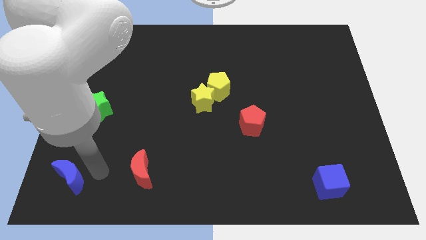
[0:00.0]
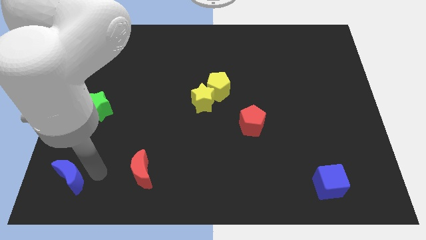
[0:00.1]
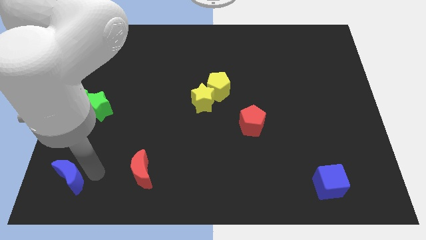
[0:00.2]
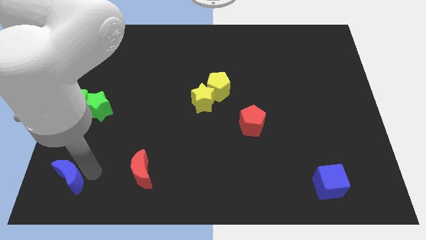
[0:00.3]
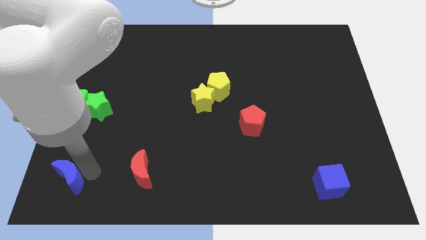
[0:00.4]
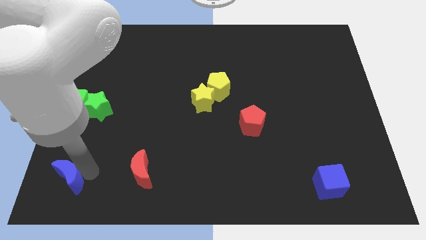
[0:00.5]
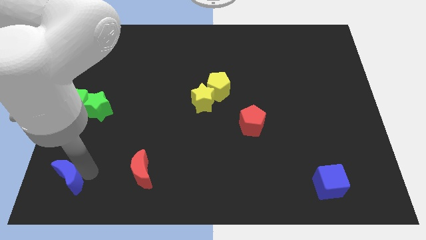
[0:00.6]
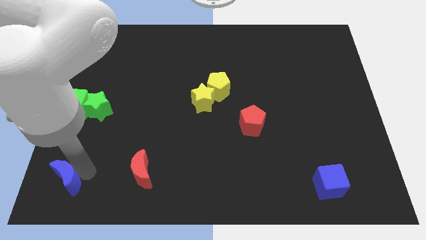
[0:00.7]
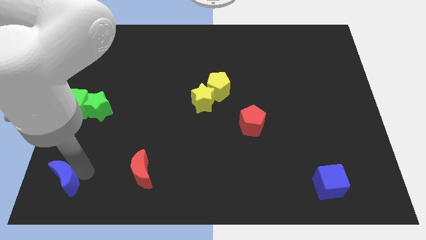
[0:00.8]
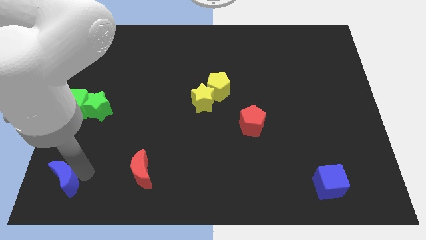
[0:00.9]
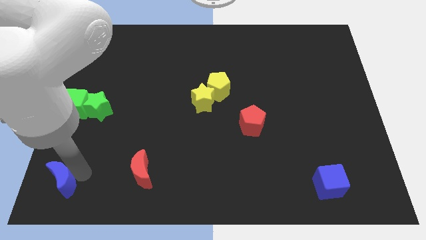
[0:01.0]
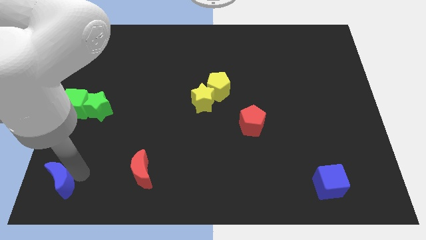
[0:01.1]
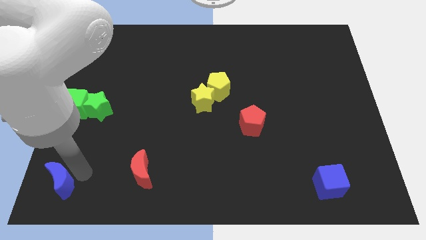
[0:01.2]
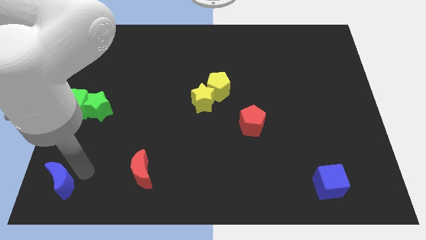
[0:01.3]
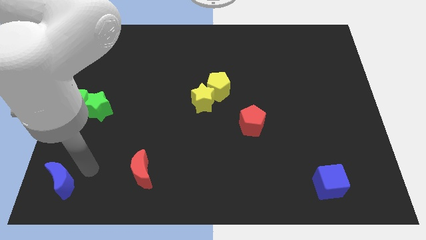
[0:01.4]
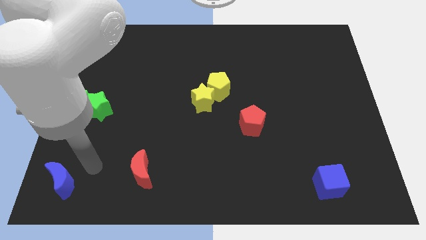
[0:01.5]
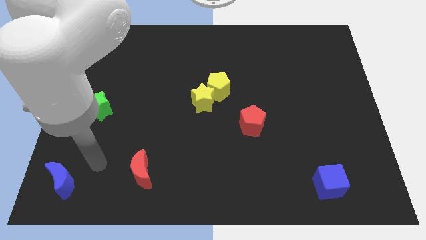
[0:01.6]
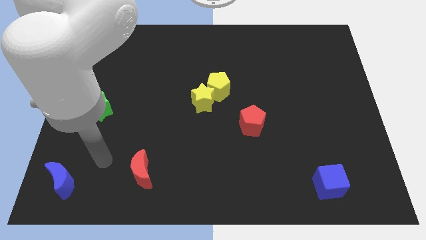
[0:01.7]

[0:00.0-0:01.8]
push the blue crescent towards the bottom left side of the board

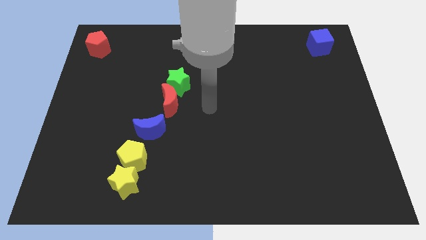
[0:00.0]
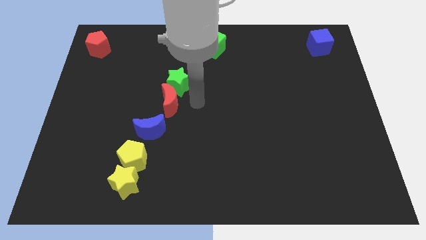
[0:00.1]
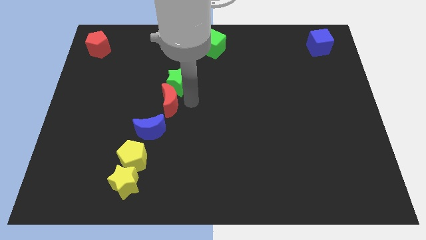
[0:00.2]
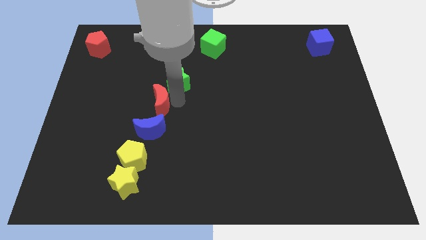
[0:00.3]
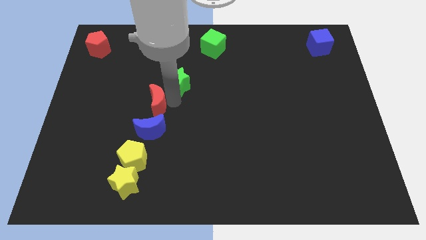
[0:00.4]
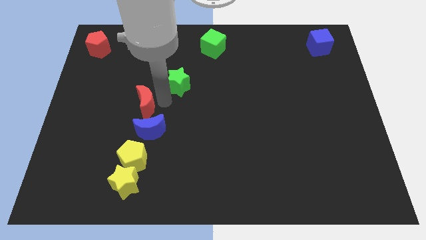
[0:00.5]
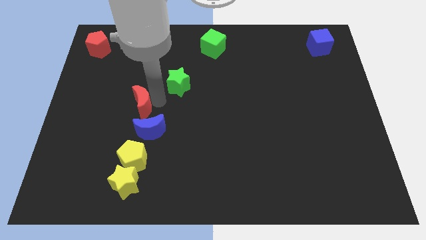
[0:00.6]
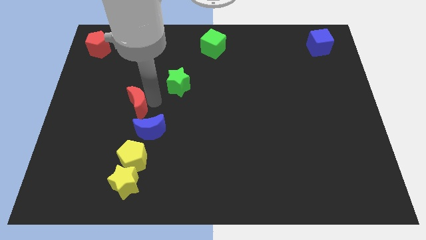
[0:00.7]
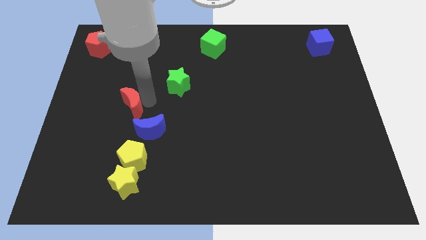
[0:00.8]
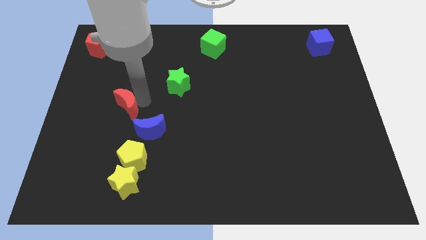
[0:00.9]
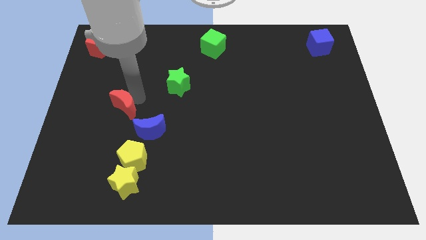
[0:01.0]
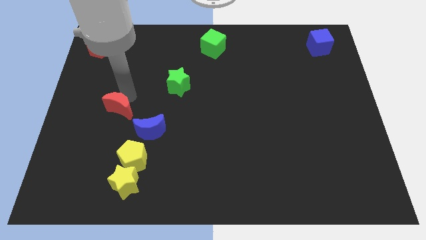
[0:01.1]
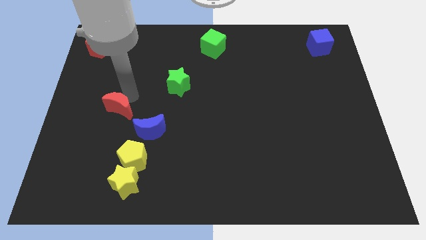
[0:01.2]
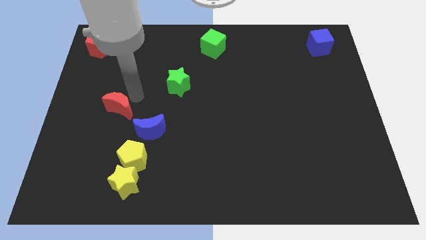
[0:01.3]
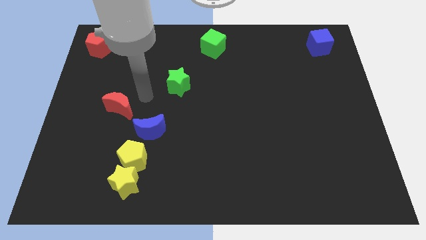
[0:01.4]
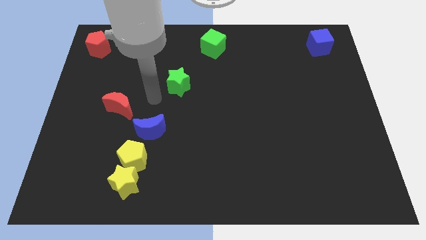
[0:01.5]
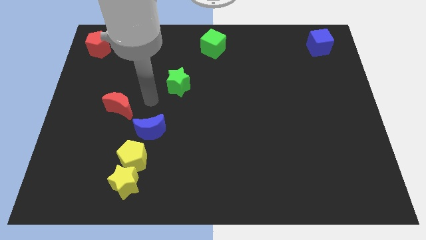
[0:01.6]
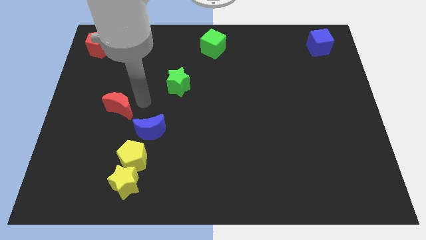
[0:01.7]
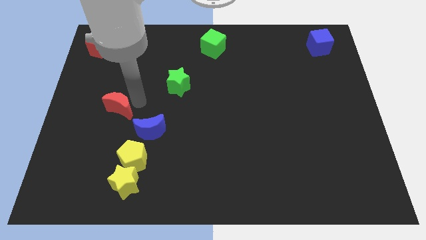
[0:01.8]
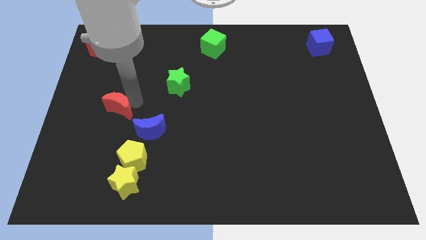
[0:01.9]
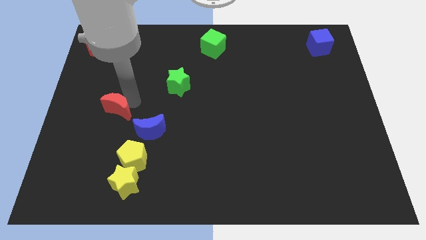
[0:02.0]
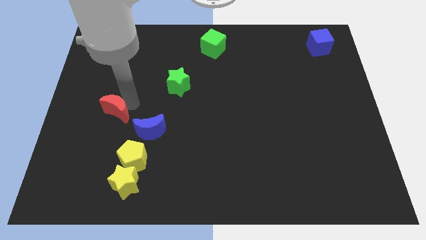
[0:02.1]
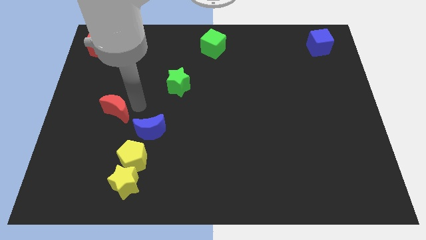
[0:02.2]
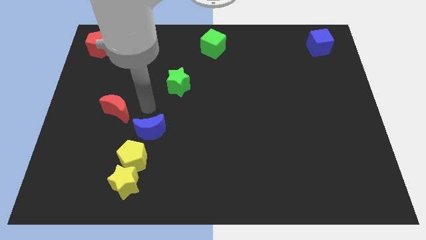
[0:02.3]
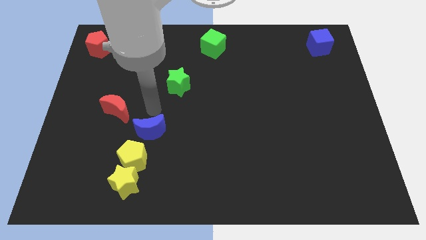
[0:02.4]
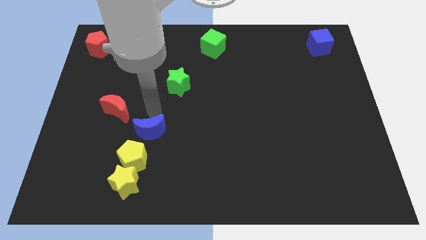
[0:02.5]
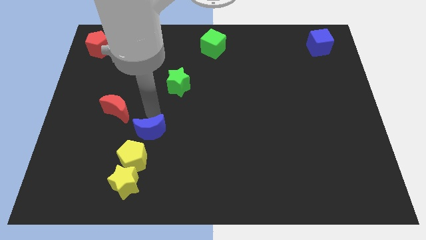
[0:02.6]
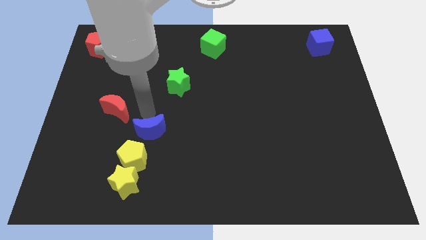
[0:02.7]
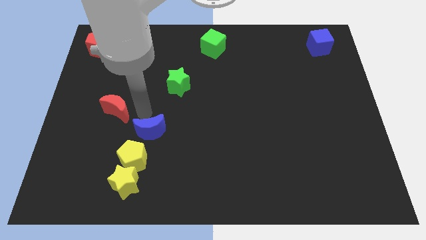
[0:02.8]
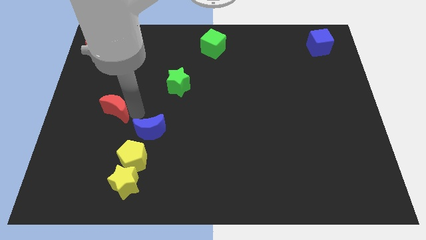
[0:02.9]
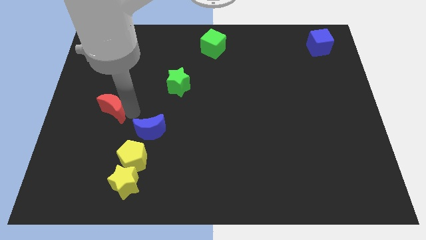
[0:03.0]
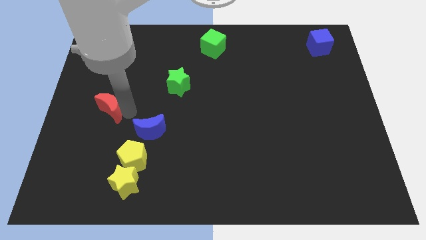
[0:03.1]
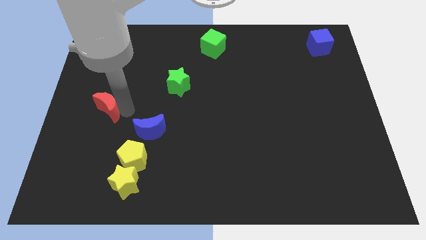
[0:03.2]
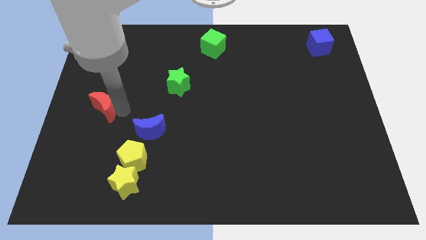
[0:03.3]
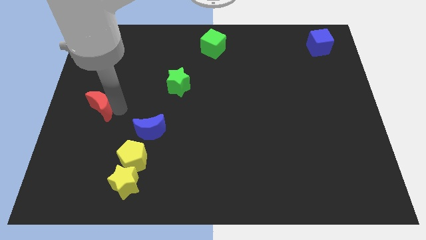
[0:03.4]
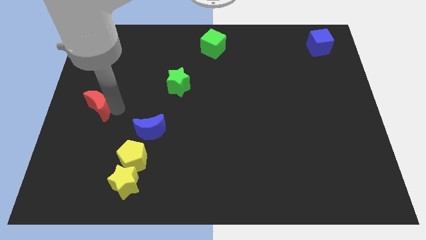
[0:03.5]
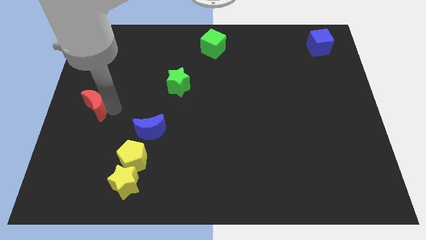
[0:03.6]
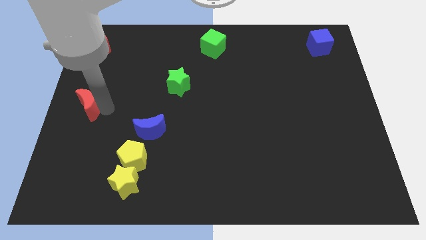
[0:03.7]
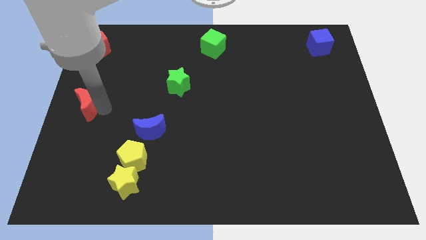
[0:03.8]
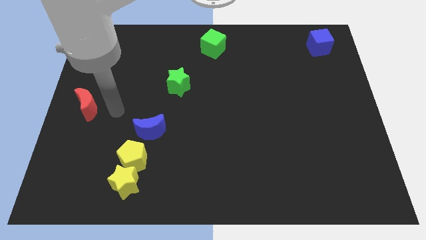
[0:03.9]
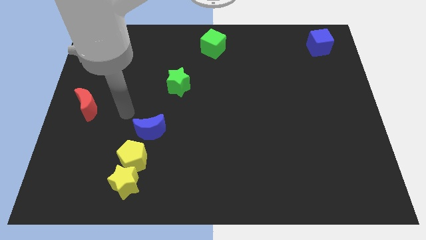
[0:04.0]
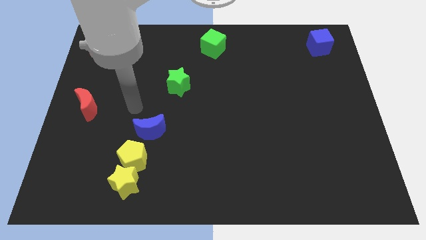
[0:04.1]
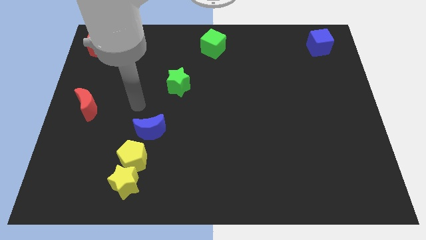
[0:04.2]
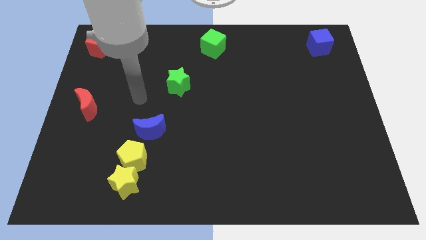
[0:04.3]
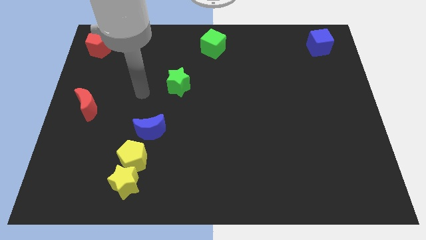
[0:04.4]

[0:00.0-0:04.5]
place the red moon vertically below the red pentagon

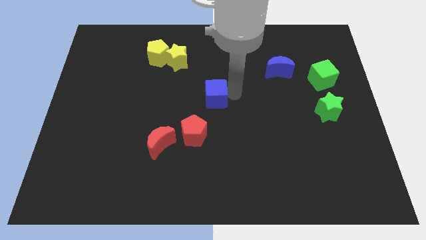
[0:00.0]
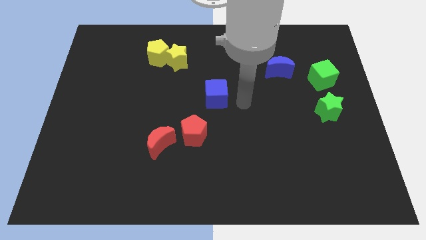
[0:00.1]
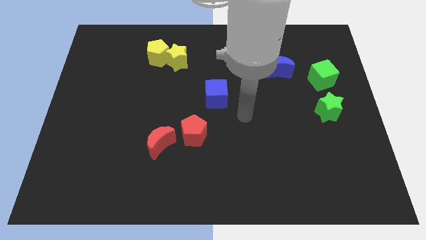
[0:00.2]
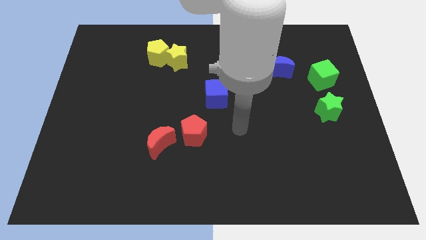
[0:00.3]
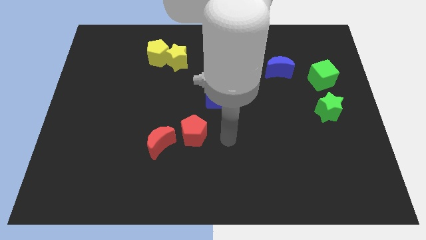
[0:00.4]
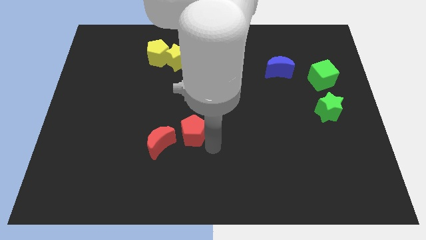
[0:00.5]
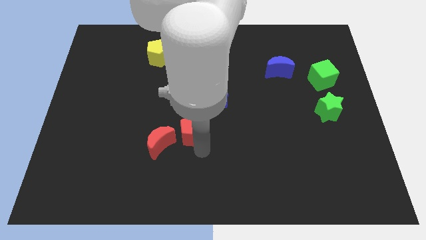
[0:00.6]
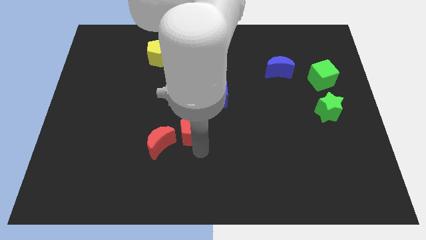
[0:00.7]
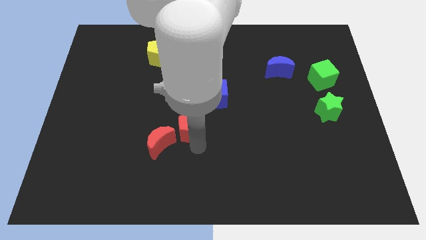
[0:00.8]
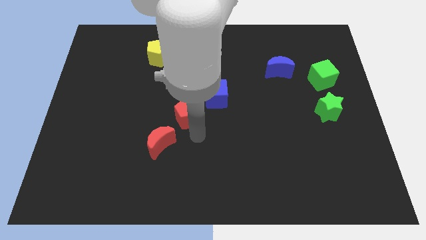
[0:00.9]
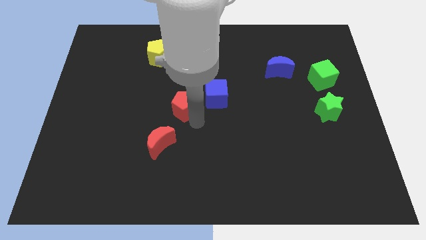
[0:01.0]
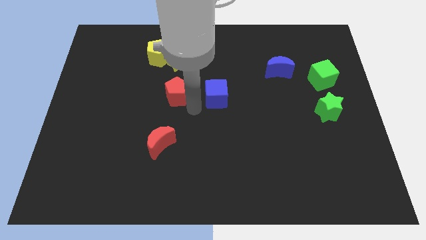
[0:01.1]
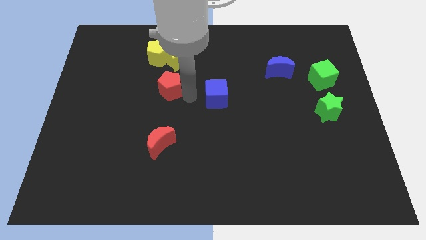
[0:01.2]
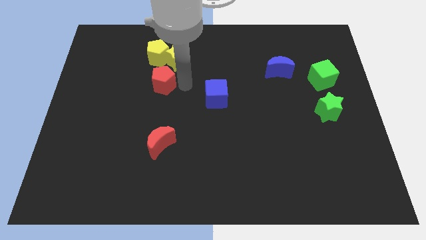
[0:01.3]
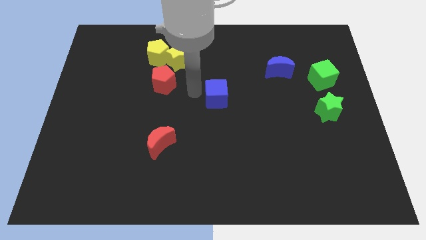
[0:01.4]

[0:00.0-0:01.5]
drag the red pentagon to the bottom right side of the yellow pentagon

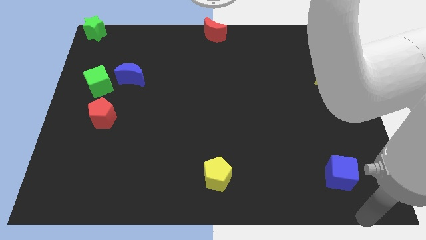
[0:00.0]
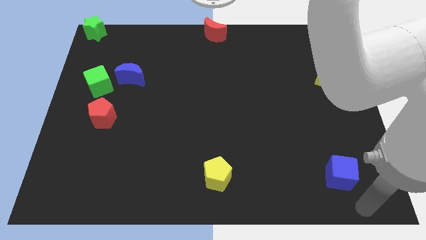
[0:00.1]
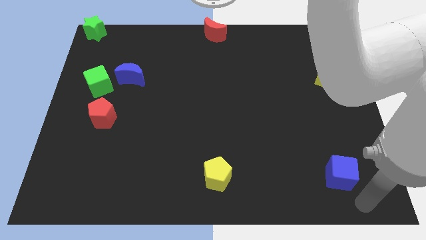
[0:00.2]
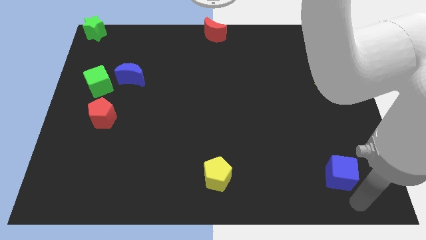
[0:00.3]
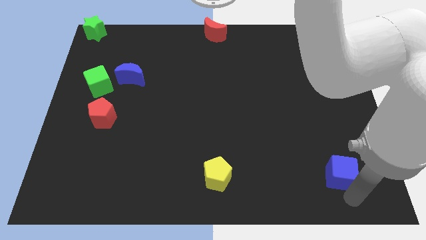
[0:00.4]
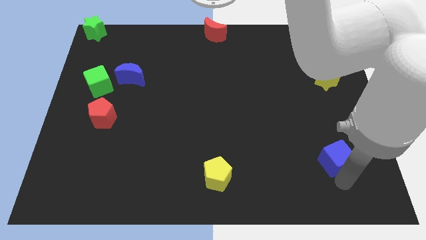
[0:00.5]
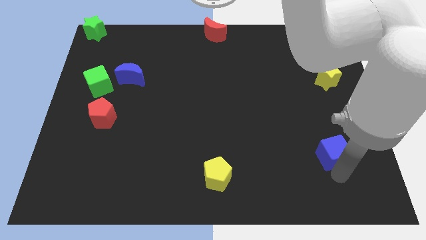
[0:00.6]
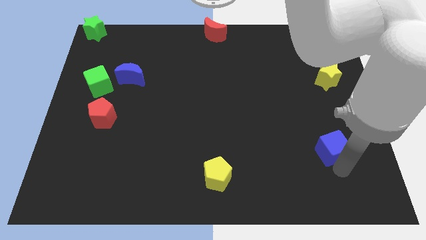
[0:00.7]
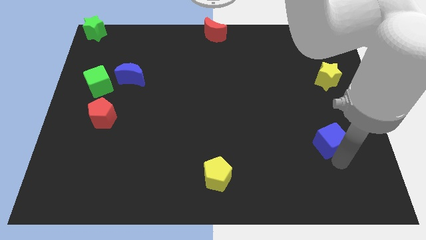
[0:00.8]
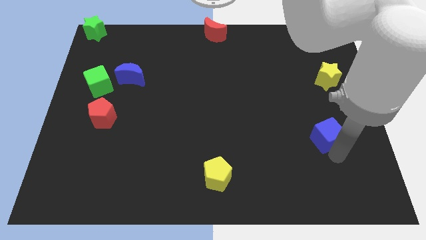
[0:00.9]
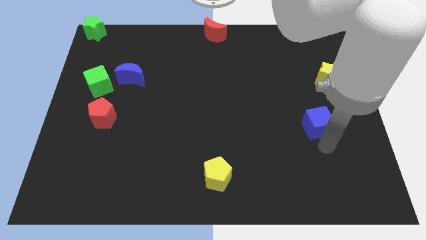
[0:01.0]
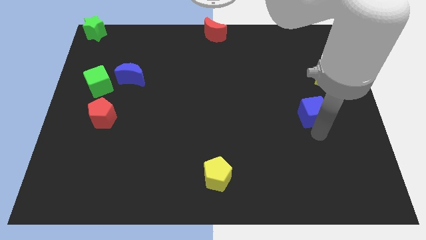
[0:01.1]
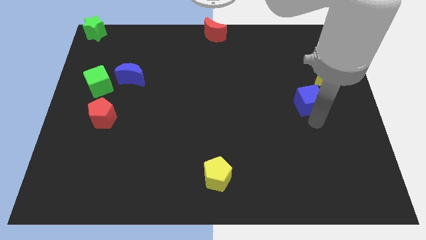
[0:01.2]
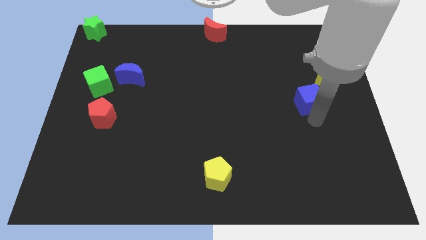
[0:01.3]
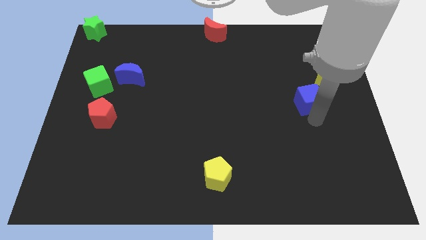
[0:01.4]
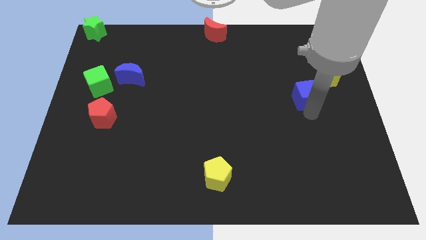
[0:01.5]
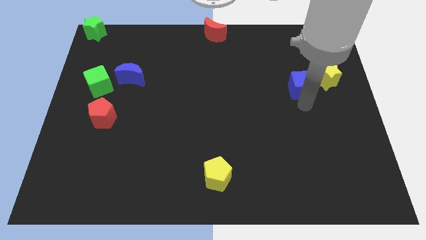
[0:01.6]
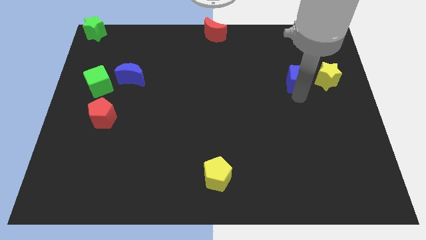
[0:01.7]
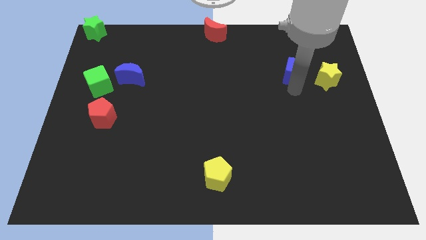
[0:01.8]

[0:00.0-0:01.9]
place the blue cube to the left of the yellow star
